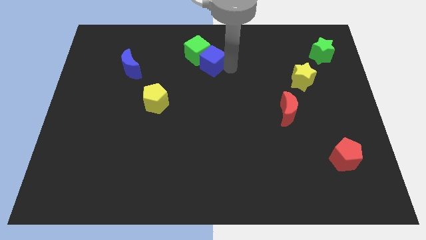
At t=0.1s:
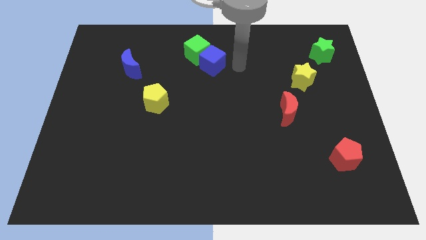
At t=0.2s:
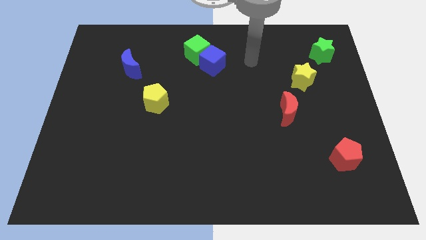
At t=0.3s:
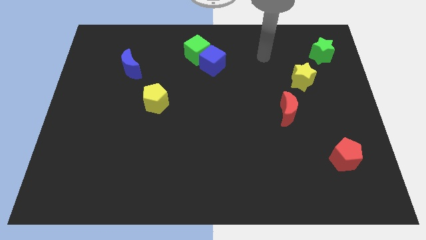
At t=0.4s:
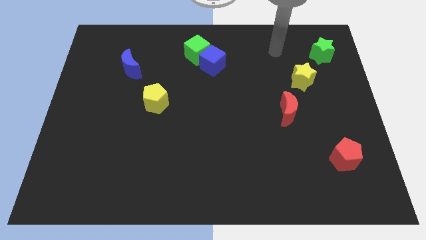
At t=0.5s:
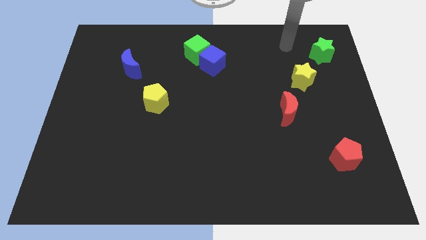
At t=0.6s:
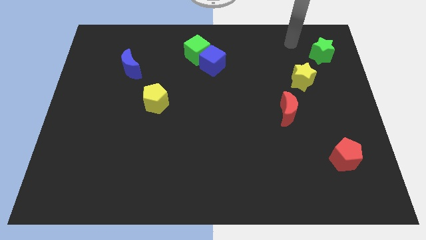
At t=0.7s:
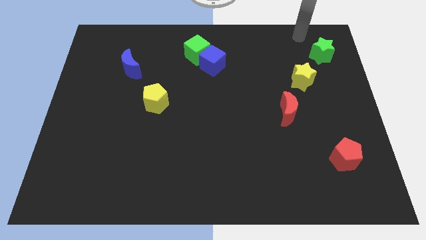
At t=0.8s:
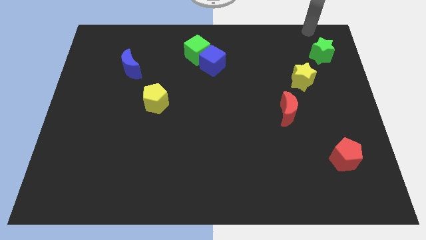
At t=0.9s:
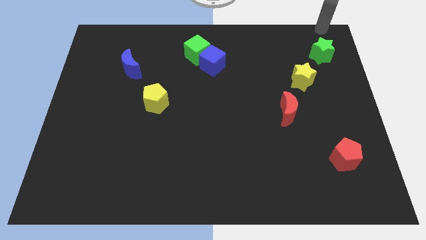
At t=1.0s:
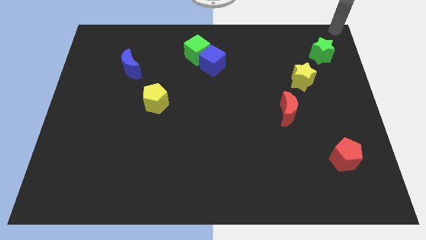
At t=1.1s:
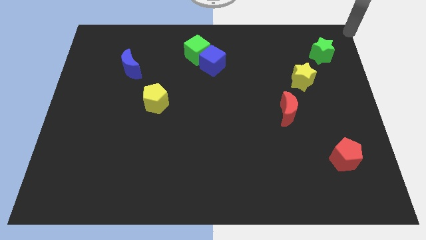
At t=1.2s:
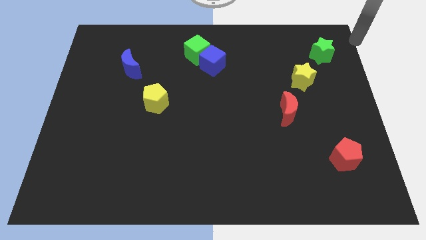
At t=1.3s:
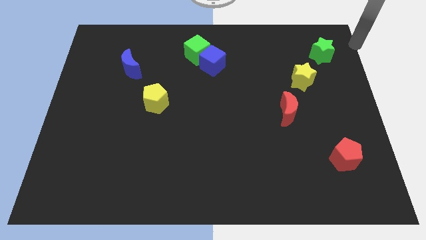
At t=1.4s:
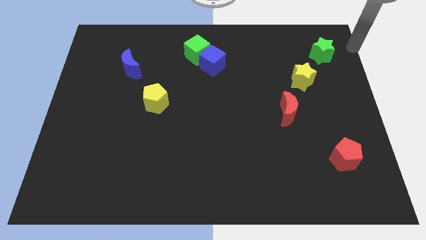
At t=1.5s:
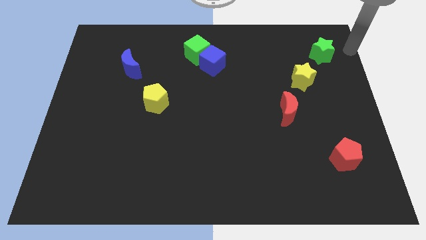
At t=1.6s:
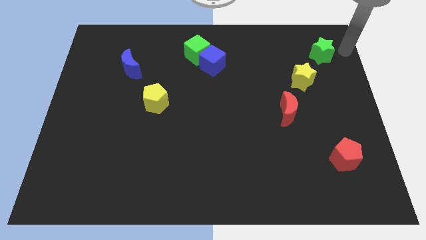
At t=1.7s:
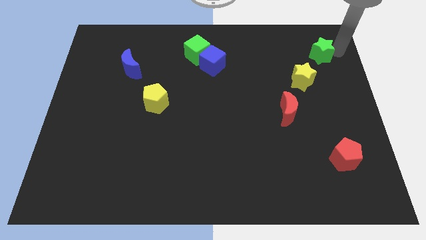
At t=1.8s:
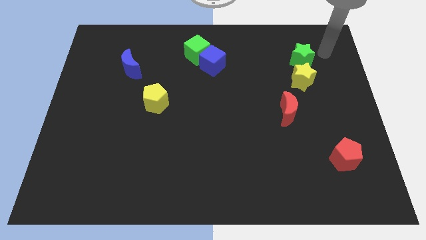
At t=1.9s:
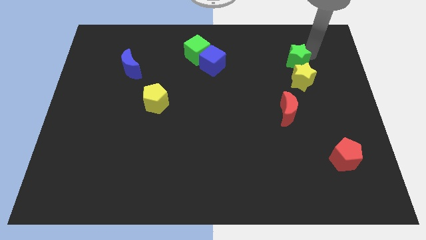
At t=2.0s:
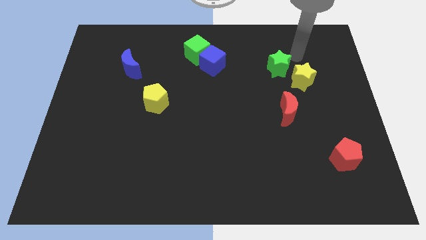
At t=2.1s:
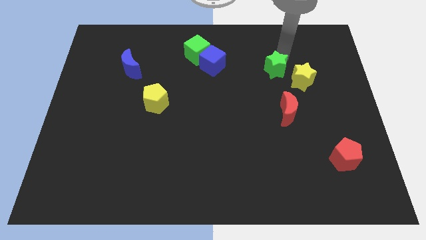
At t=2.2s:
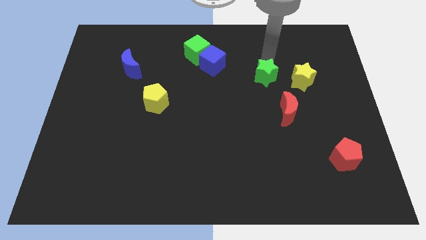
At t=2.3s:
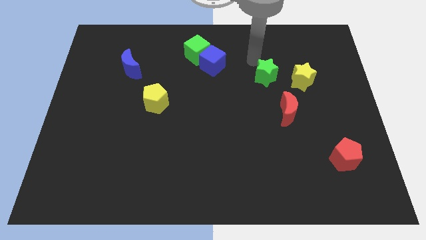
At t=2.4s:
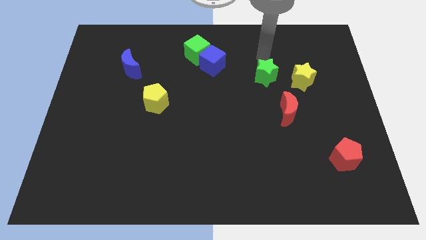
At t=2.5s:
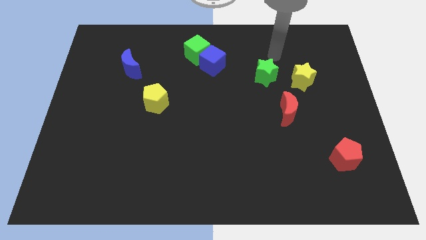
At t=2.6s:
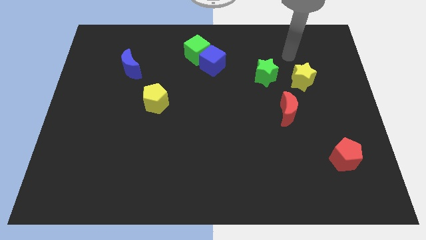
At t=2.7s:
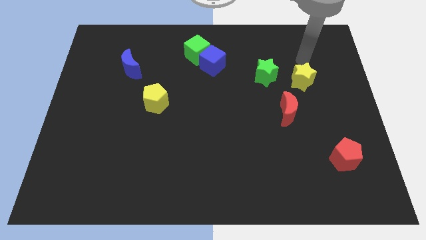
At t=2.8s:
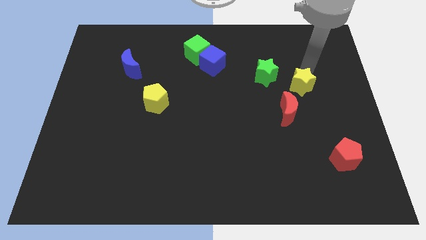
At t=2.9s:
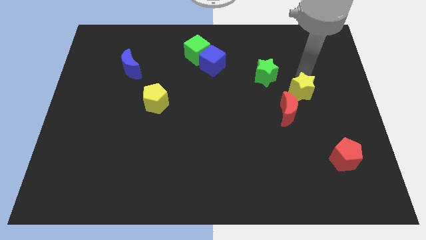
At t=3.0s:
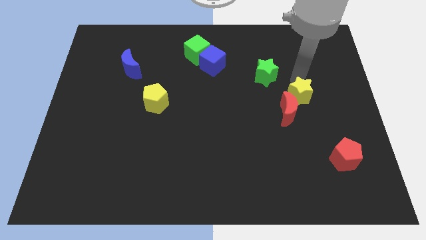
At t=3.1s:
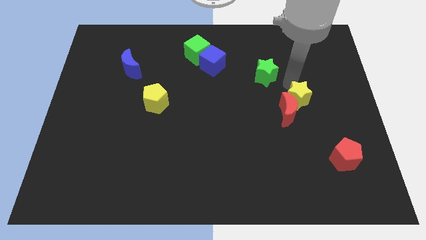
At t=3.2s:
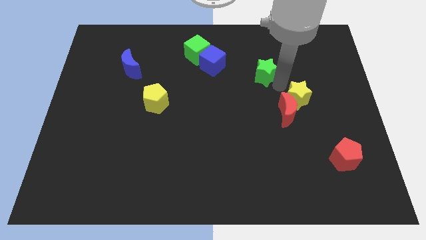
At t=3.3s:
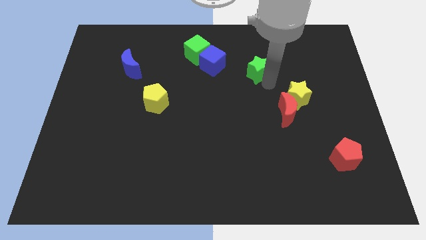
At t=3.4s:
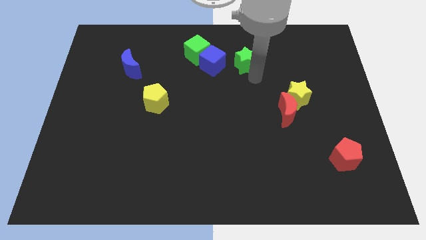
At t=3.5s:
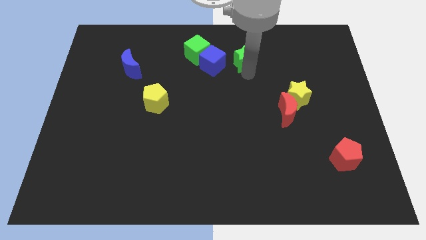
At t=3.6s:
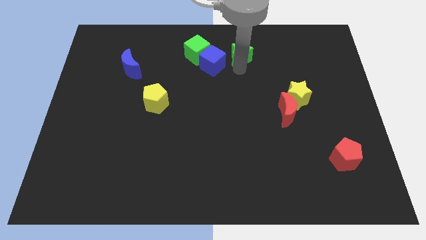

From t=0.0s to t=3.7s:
move away from the blue cube

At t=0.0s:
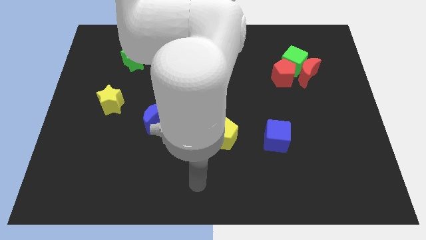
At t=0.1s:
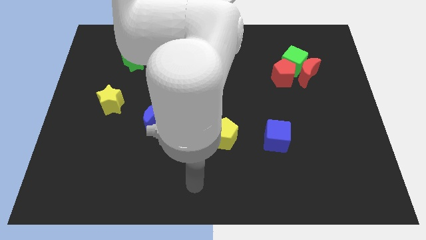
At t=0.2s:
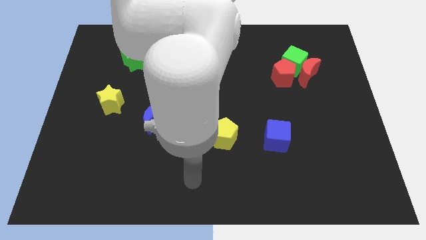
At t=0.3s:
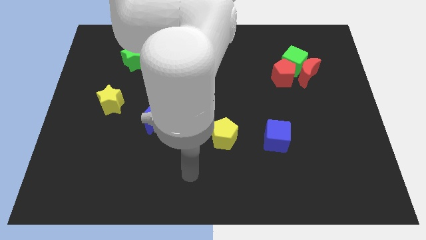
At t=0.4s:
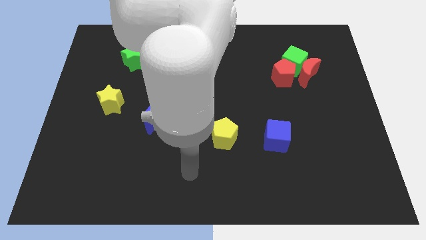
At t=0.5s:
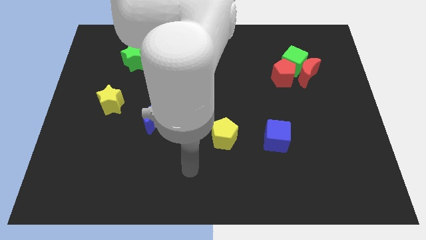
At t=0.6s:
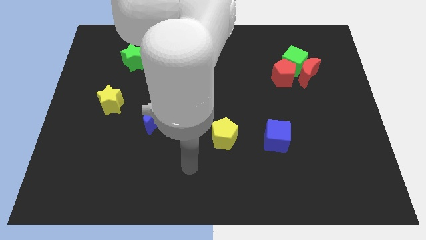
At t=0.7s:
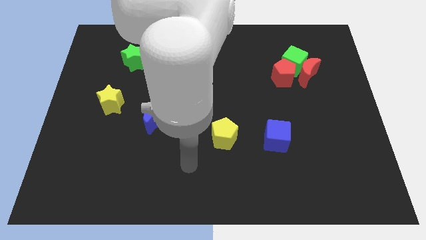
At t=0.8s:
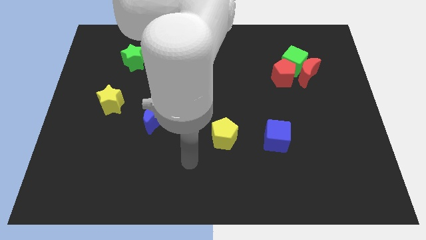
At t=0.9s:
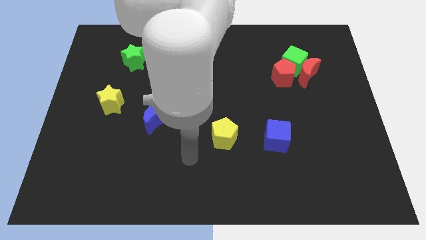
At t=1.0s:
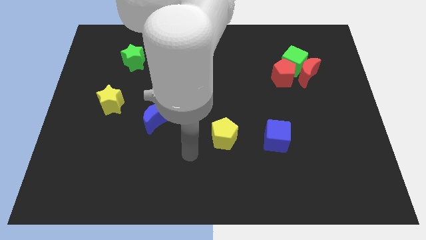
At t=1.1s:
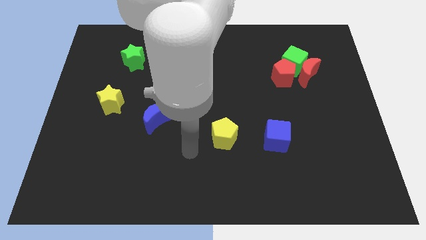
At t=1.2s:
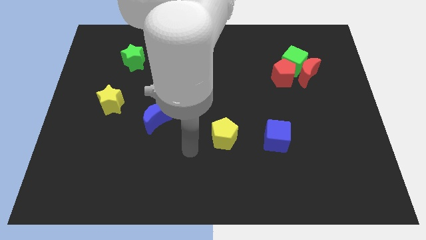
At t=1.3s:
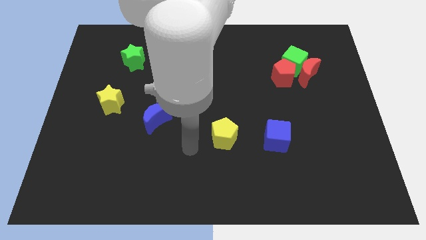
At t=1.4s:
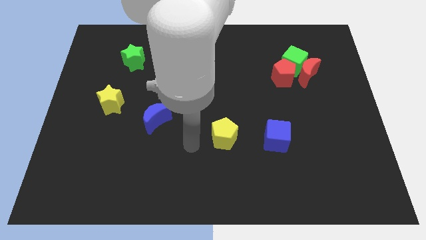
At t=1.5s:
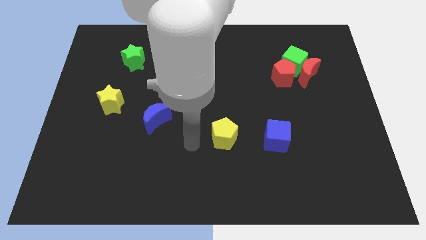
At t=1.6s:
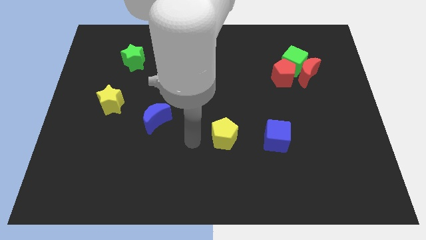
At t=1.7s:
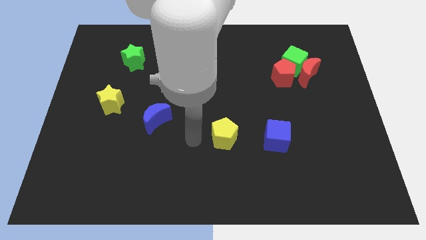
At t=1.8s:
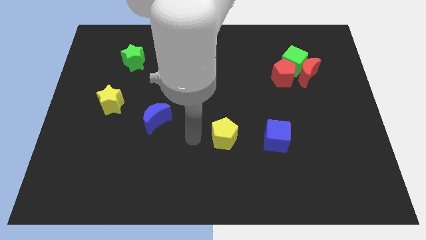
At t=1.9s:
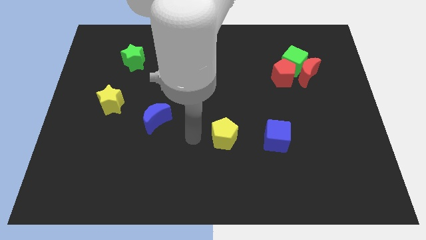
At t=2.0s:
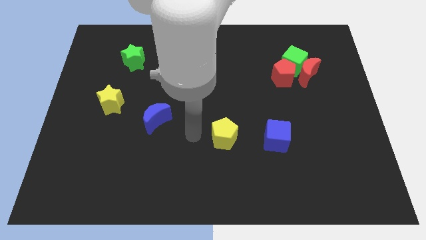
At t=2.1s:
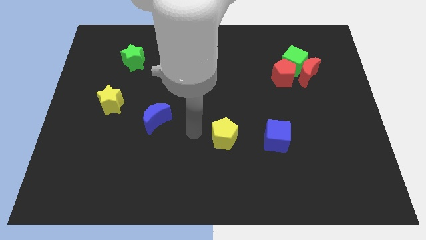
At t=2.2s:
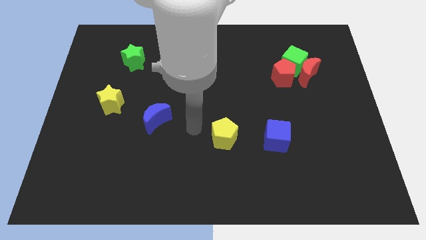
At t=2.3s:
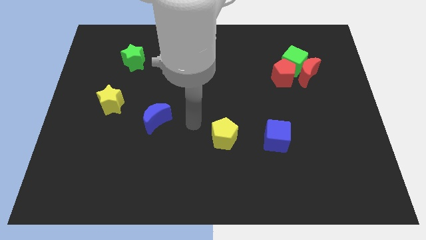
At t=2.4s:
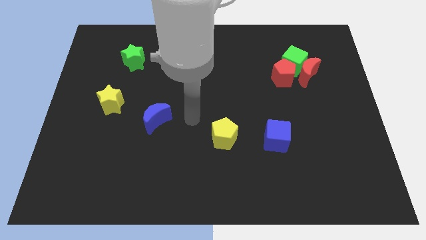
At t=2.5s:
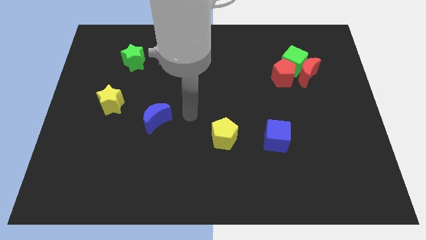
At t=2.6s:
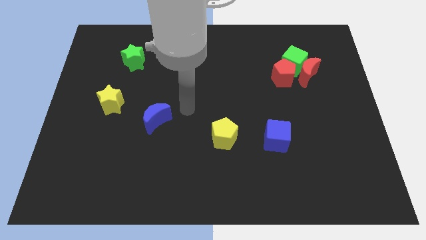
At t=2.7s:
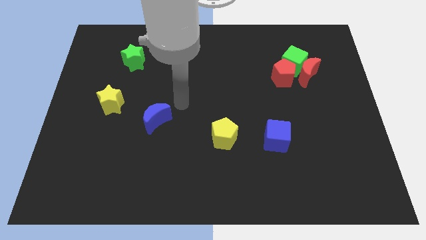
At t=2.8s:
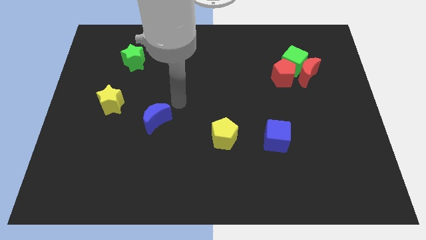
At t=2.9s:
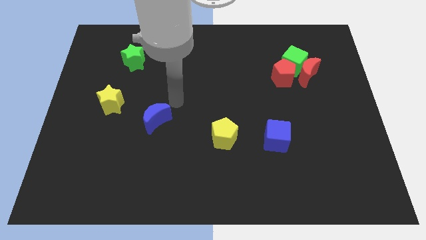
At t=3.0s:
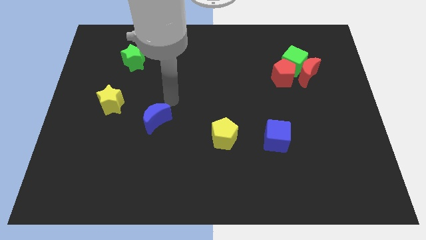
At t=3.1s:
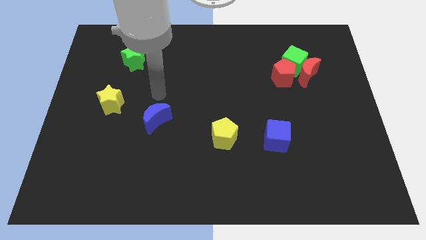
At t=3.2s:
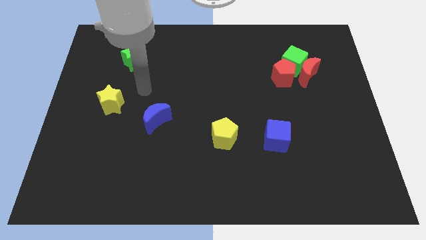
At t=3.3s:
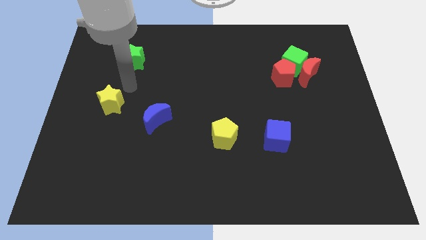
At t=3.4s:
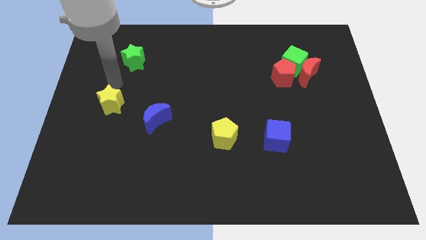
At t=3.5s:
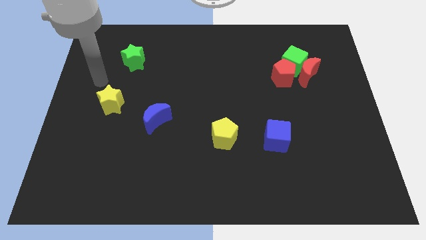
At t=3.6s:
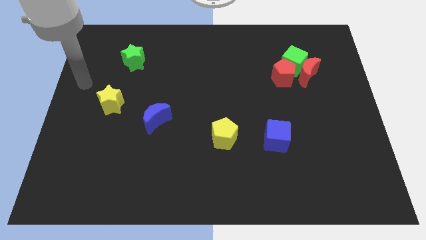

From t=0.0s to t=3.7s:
move your arm close to the yellow star

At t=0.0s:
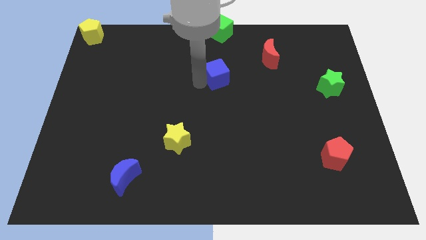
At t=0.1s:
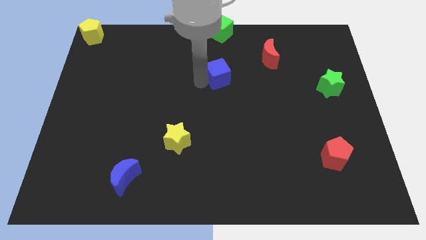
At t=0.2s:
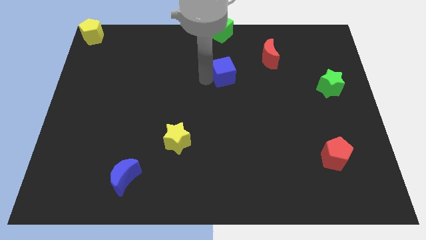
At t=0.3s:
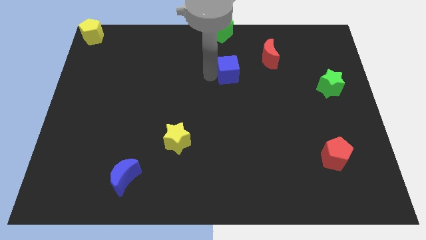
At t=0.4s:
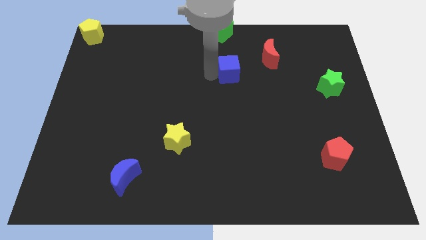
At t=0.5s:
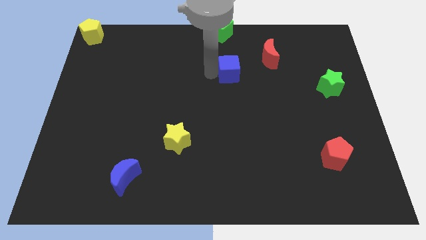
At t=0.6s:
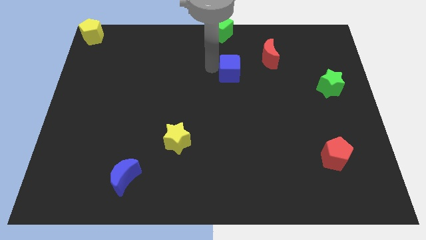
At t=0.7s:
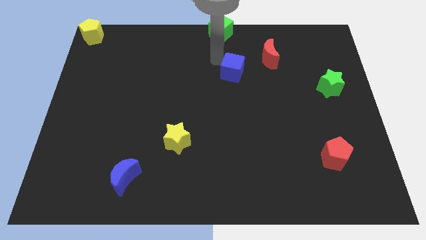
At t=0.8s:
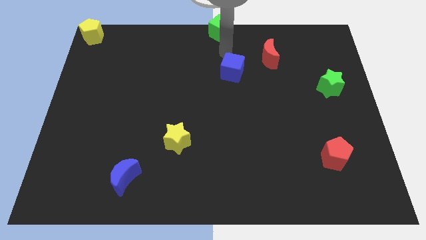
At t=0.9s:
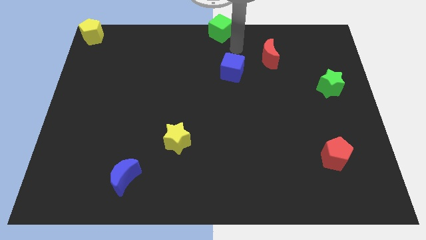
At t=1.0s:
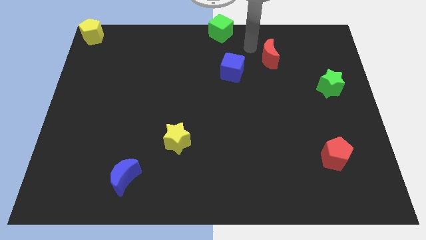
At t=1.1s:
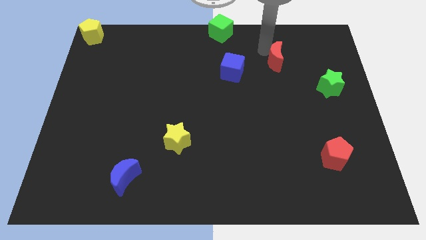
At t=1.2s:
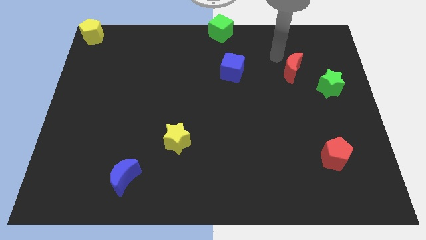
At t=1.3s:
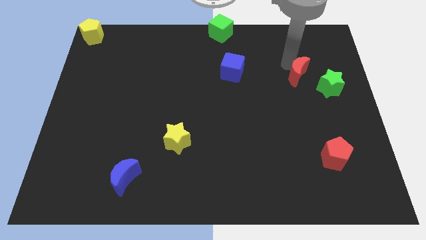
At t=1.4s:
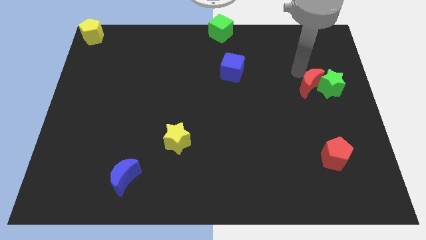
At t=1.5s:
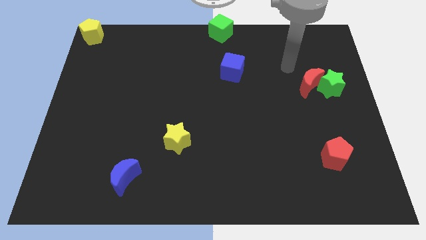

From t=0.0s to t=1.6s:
push red crescent towards green star
